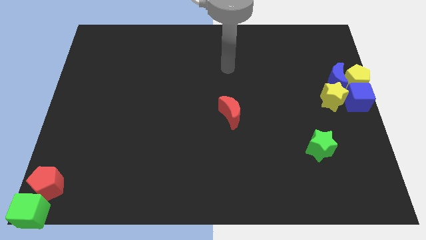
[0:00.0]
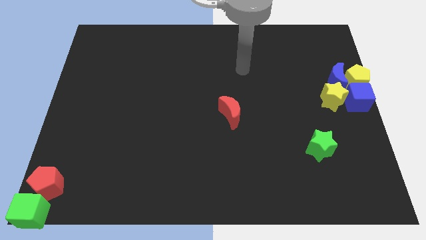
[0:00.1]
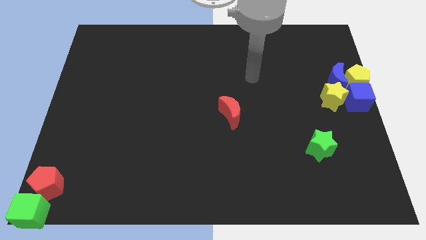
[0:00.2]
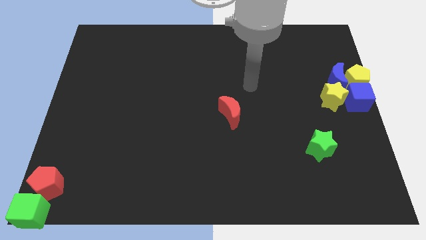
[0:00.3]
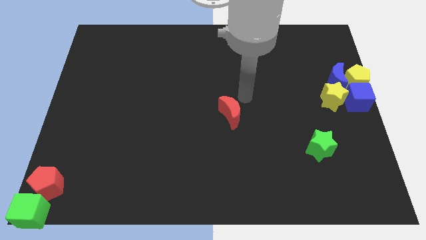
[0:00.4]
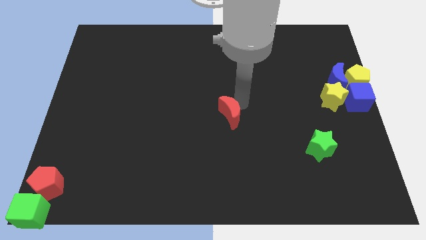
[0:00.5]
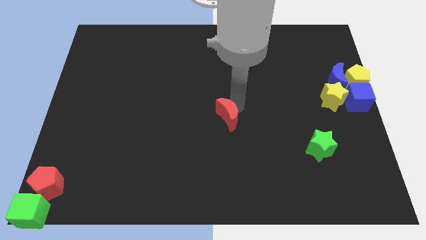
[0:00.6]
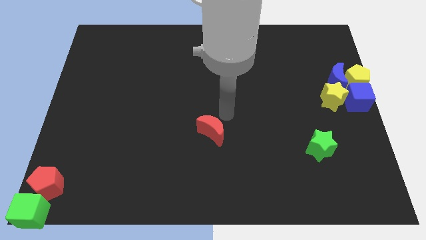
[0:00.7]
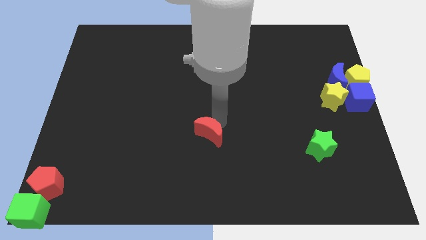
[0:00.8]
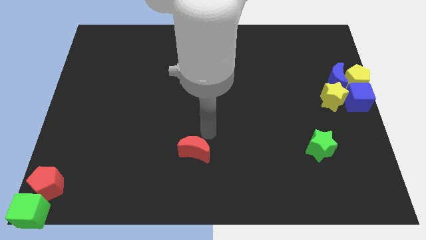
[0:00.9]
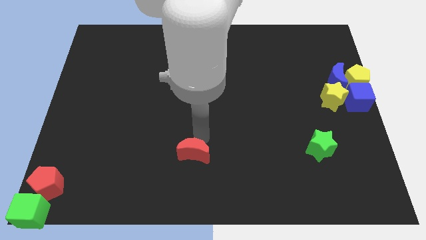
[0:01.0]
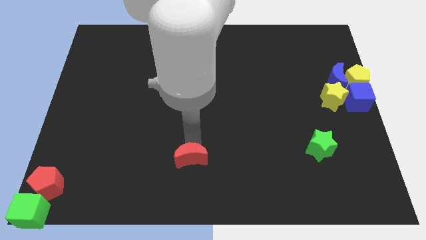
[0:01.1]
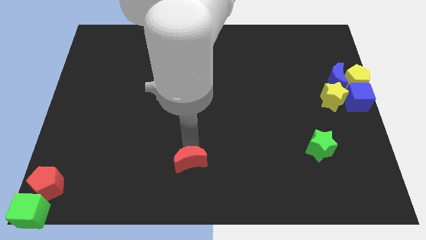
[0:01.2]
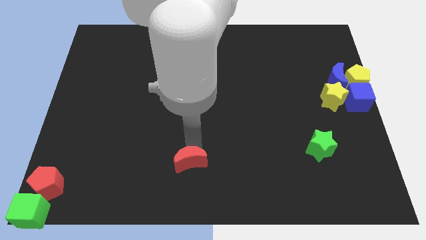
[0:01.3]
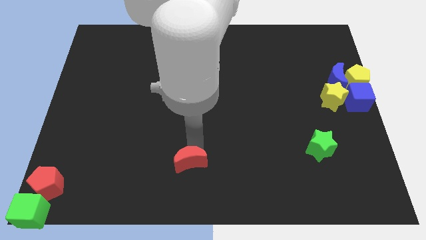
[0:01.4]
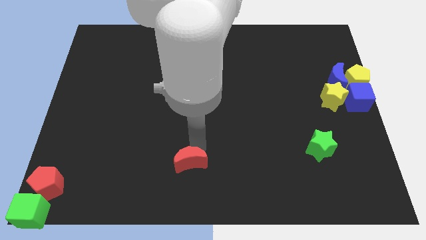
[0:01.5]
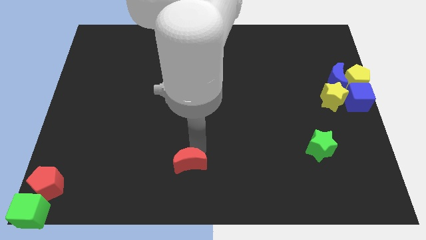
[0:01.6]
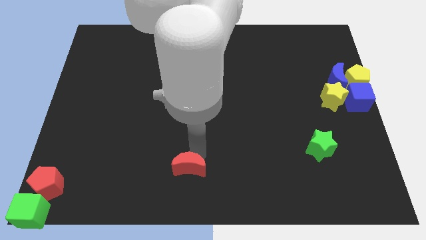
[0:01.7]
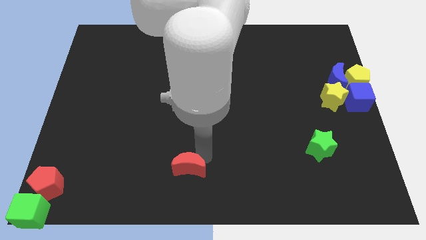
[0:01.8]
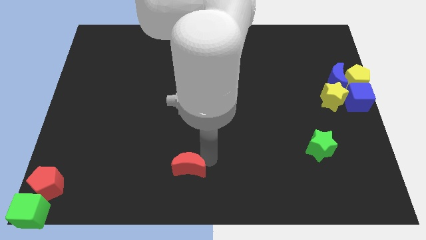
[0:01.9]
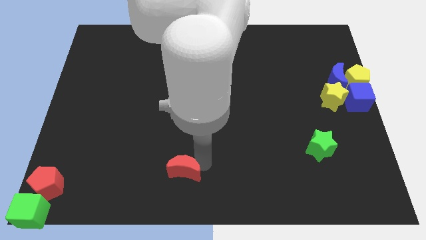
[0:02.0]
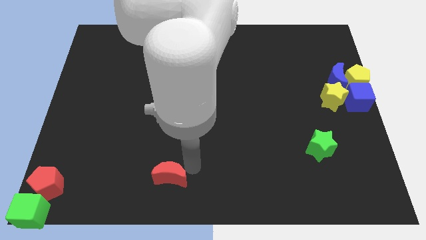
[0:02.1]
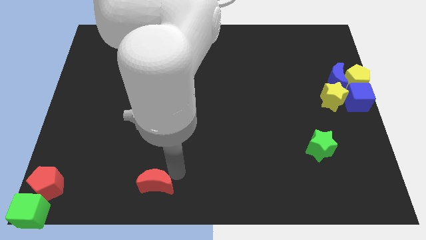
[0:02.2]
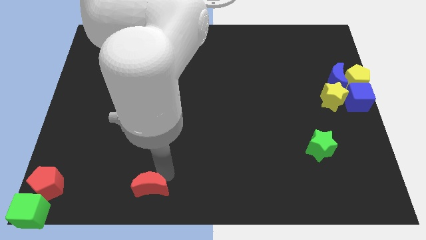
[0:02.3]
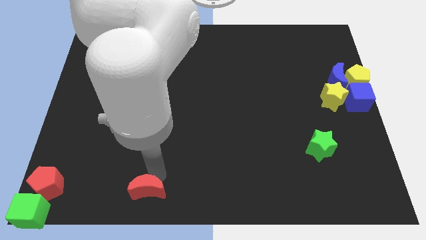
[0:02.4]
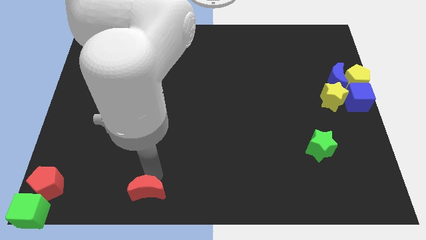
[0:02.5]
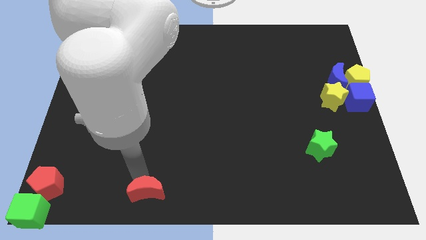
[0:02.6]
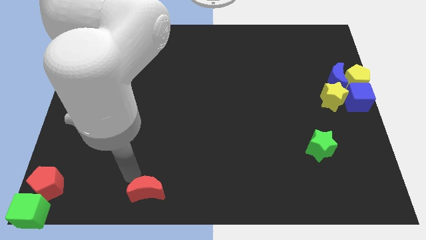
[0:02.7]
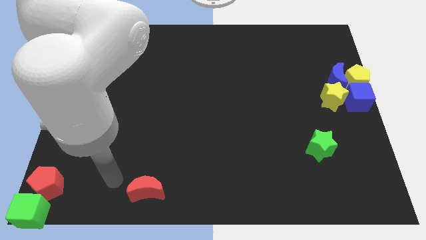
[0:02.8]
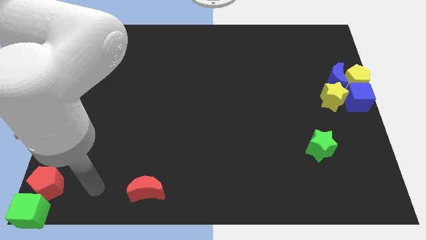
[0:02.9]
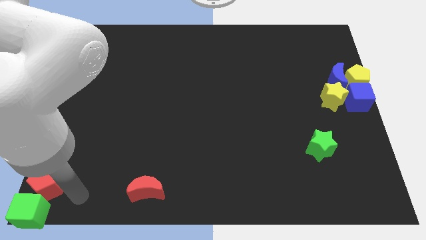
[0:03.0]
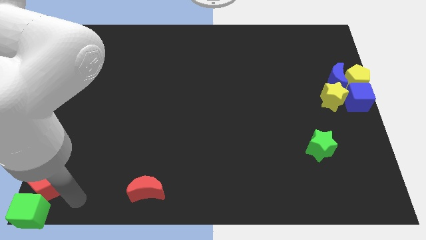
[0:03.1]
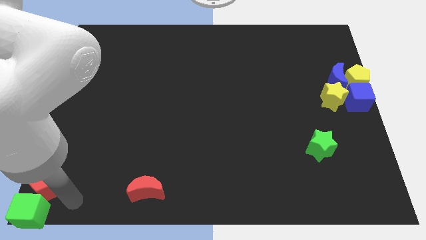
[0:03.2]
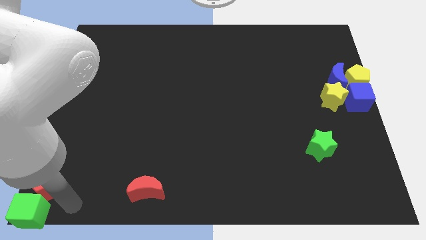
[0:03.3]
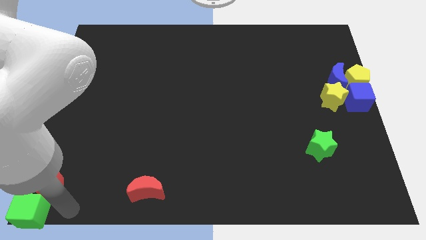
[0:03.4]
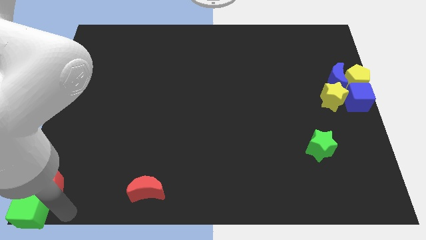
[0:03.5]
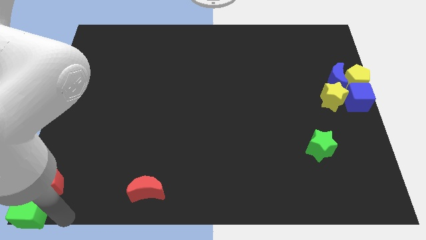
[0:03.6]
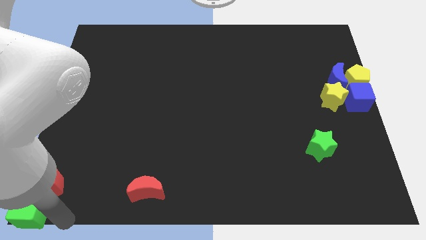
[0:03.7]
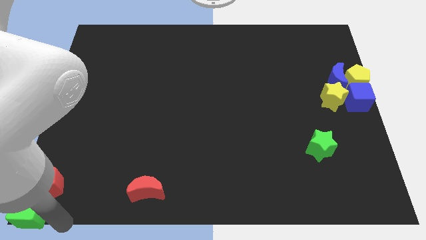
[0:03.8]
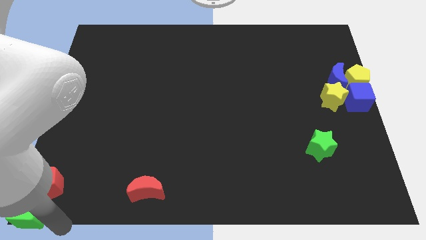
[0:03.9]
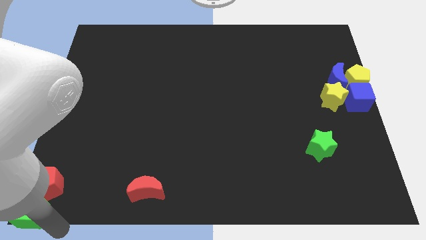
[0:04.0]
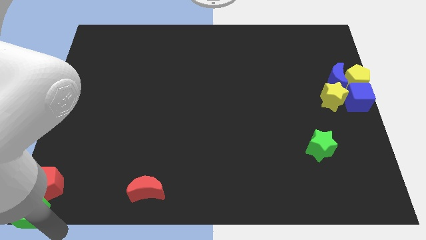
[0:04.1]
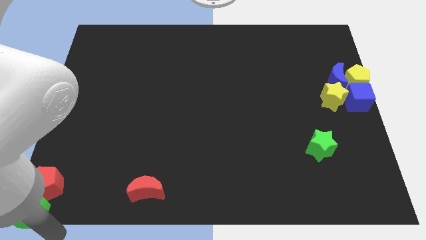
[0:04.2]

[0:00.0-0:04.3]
move the red moon parallelly right to the red pentagon

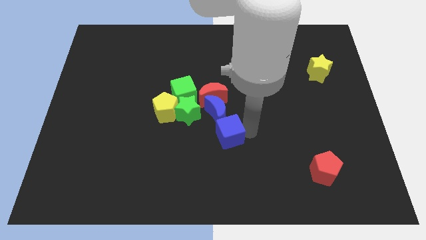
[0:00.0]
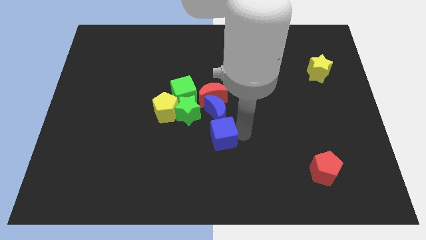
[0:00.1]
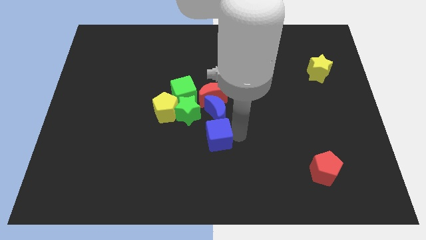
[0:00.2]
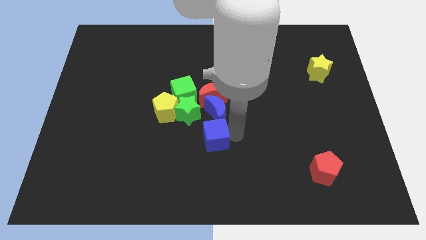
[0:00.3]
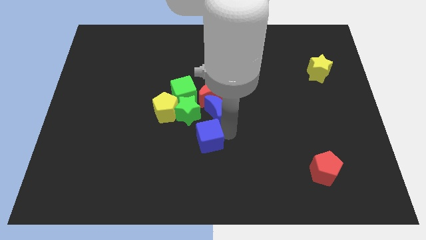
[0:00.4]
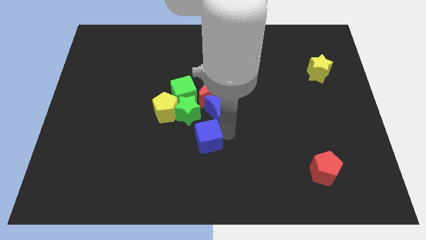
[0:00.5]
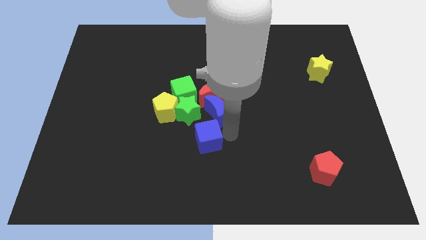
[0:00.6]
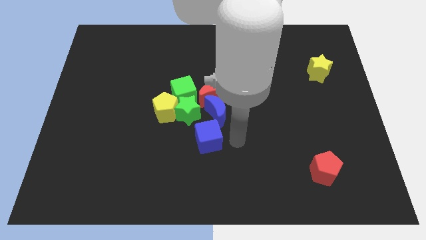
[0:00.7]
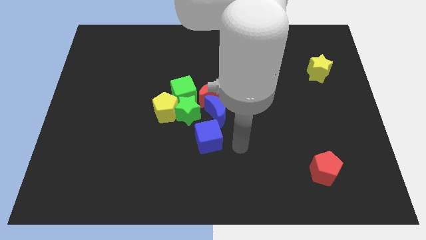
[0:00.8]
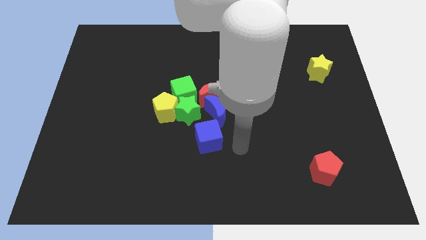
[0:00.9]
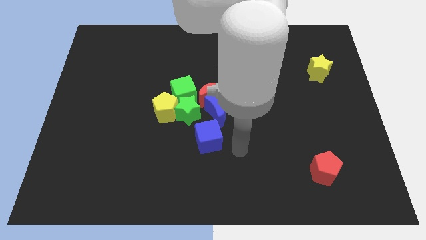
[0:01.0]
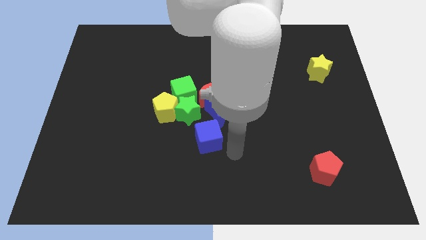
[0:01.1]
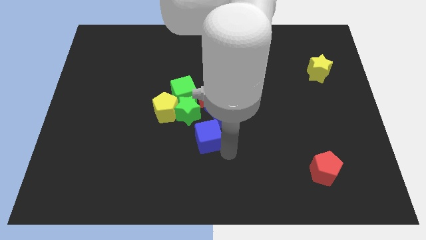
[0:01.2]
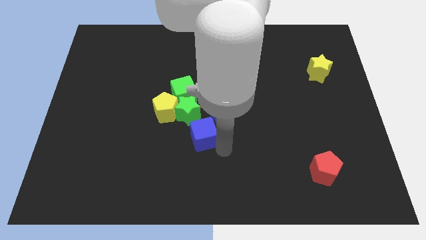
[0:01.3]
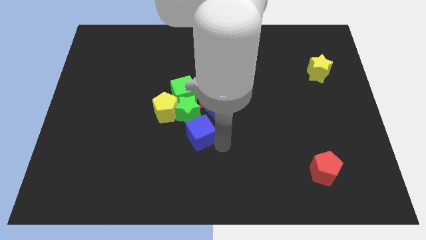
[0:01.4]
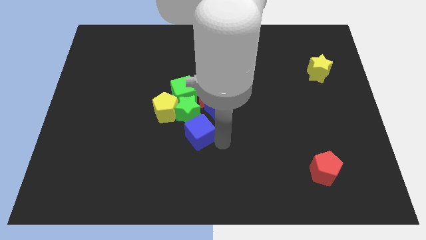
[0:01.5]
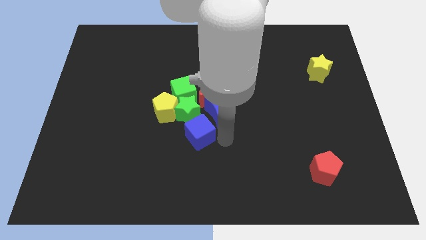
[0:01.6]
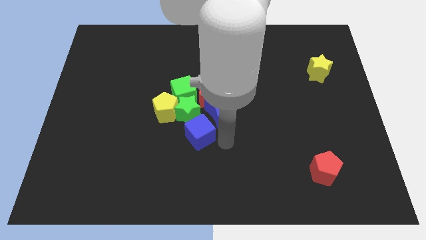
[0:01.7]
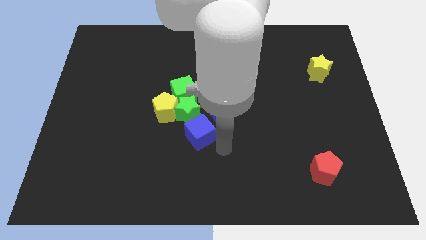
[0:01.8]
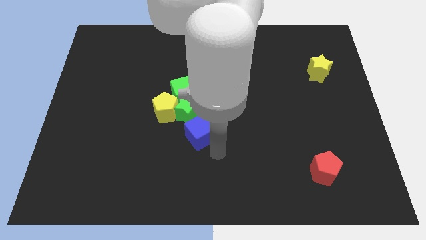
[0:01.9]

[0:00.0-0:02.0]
push the blue cube into the green star

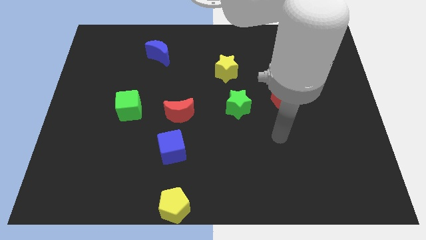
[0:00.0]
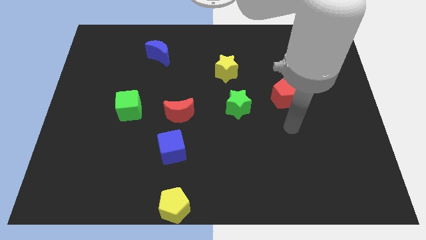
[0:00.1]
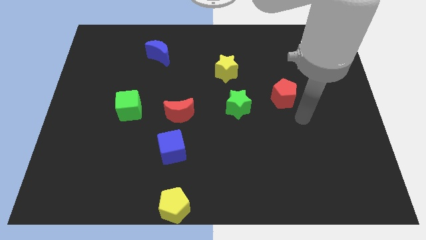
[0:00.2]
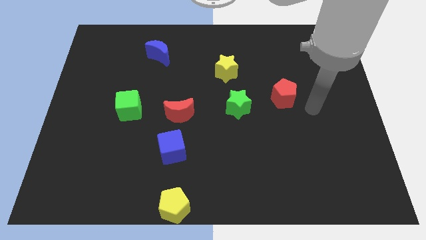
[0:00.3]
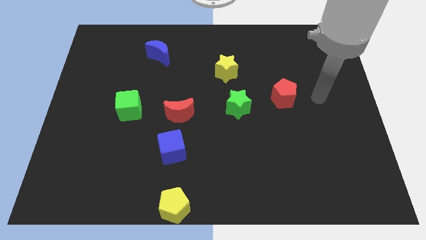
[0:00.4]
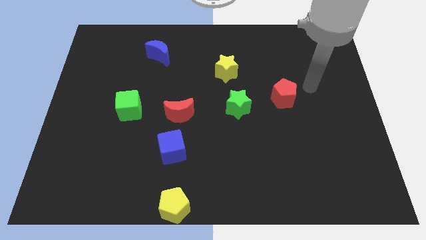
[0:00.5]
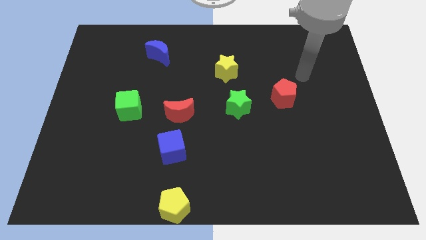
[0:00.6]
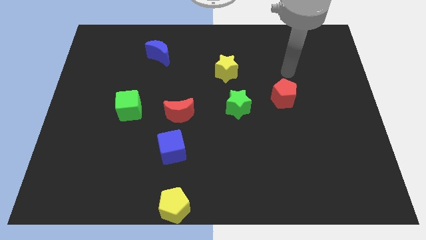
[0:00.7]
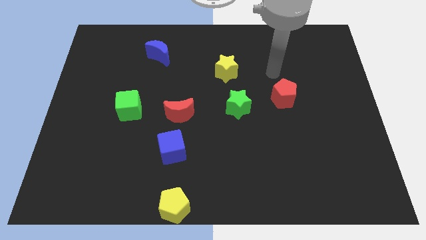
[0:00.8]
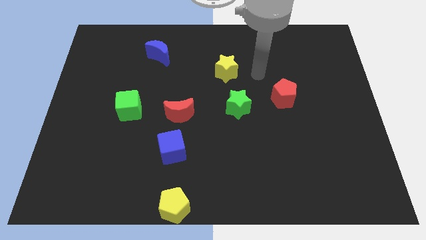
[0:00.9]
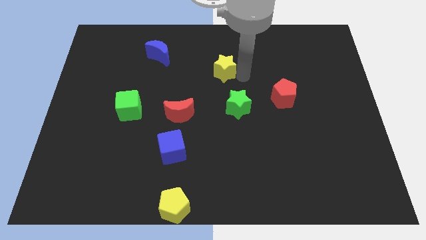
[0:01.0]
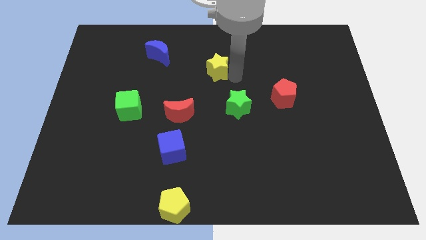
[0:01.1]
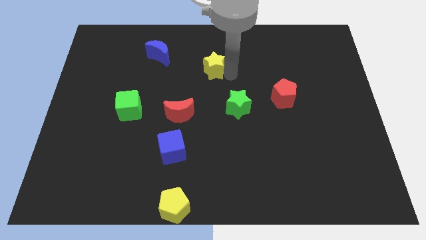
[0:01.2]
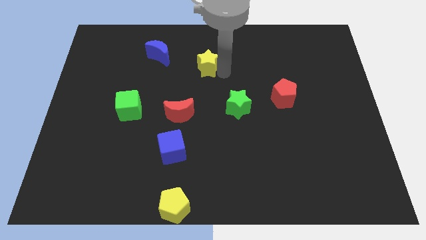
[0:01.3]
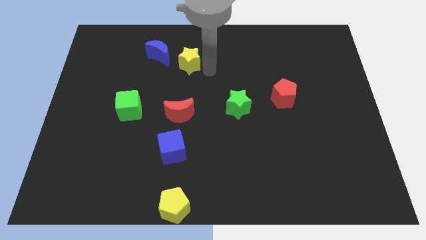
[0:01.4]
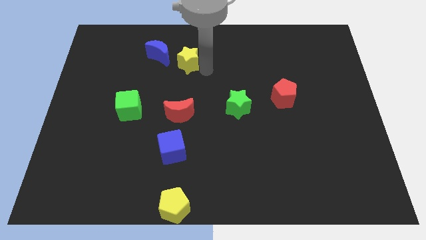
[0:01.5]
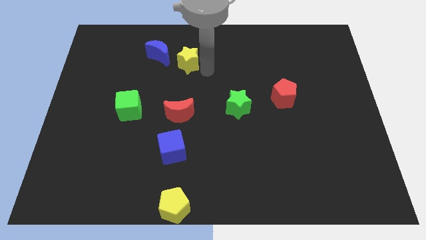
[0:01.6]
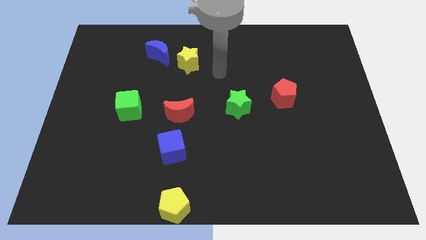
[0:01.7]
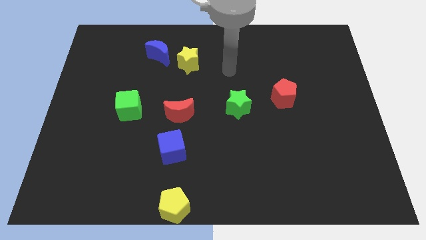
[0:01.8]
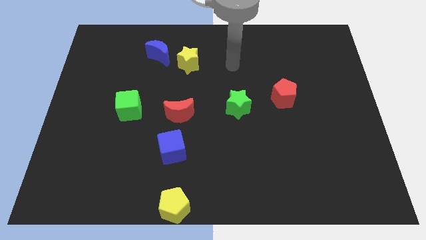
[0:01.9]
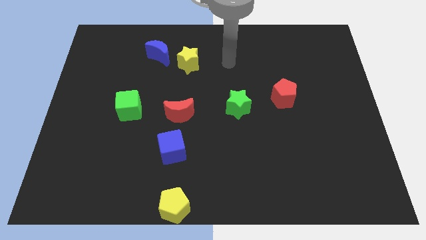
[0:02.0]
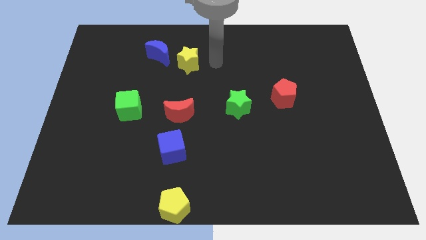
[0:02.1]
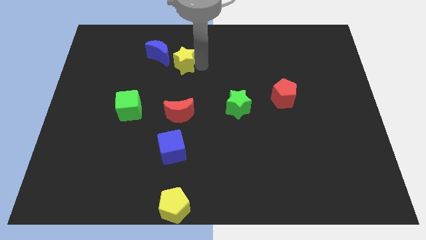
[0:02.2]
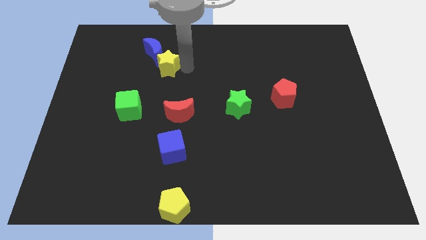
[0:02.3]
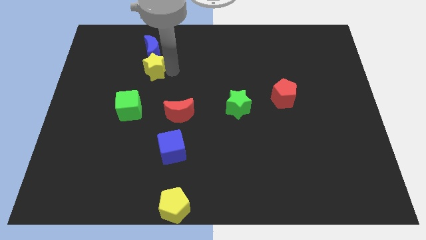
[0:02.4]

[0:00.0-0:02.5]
place the yellow star down to the blue moon
